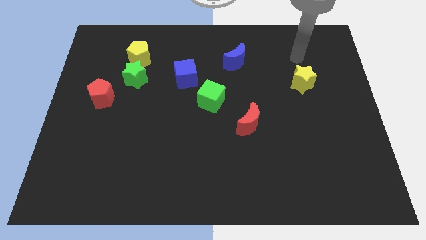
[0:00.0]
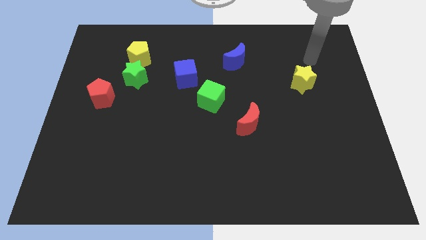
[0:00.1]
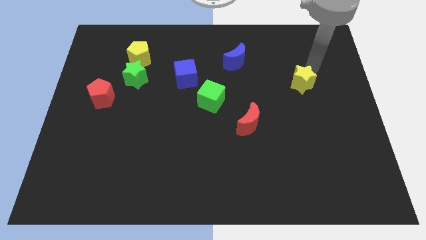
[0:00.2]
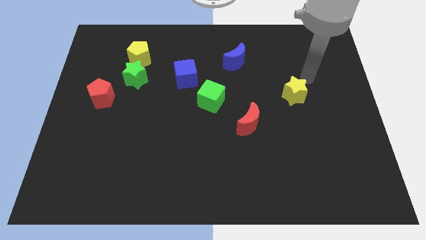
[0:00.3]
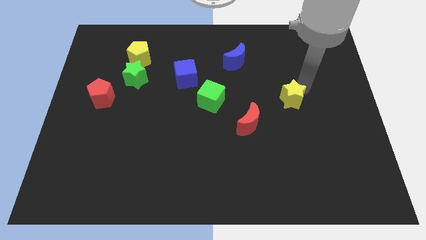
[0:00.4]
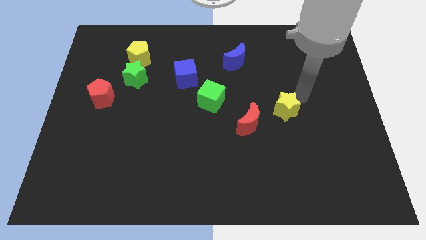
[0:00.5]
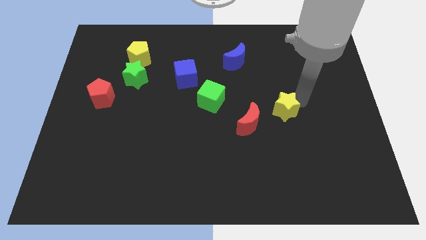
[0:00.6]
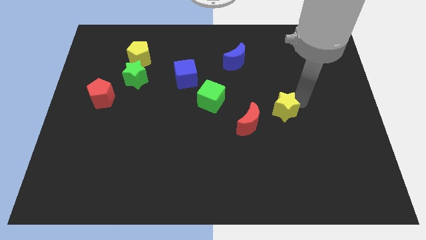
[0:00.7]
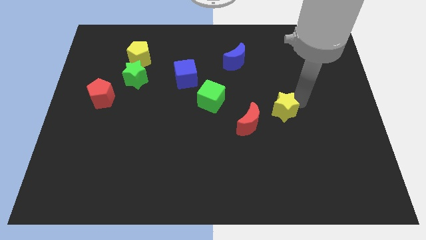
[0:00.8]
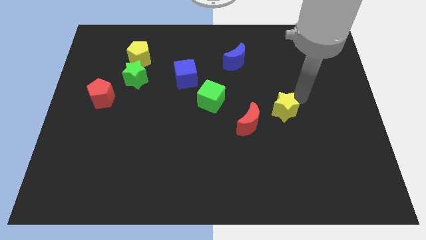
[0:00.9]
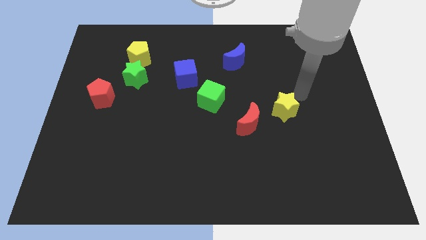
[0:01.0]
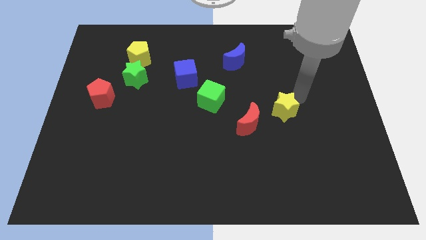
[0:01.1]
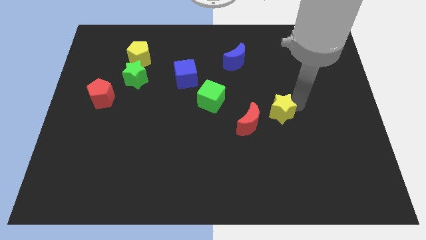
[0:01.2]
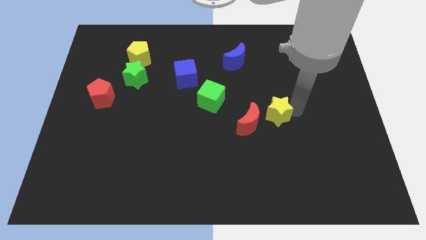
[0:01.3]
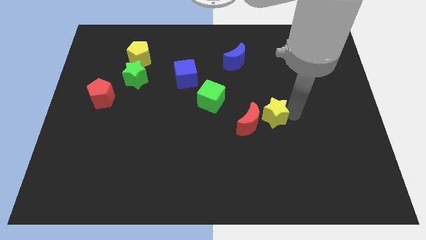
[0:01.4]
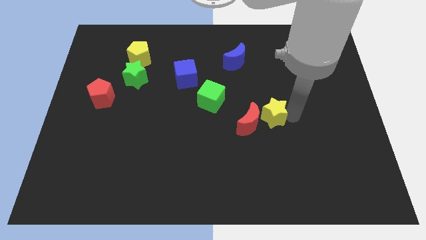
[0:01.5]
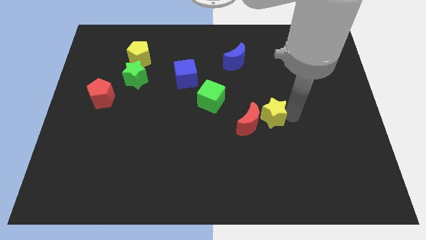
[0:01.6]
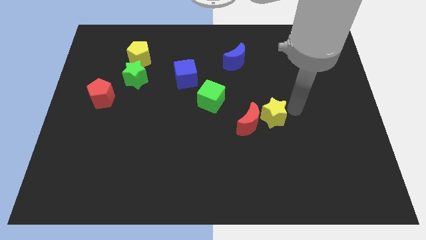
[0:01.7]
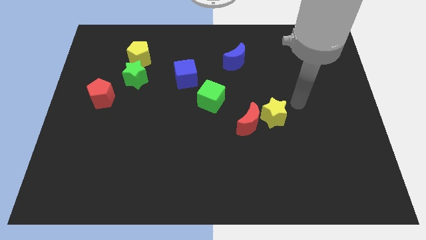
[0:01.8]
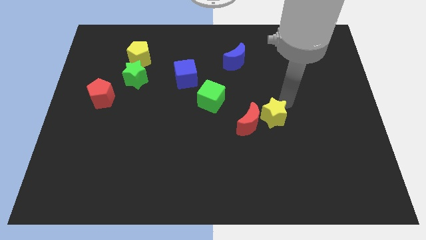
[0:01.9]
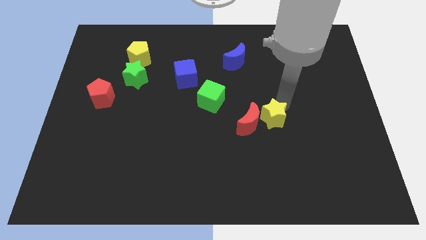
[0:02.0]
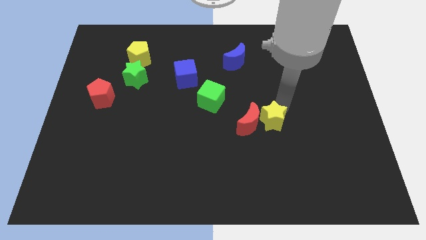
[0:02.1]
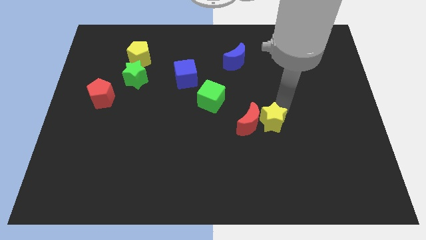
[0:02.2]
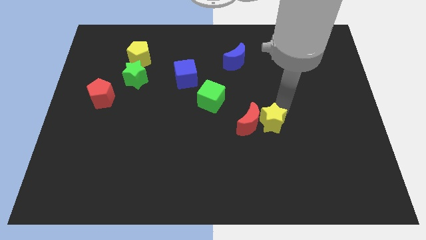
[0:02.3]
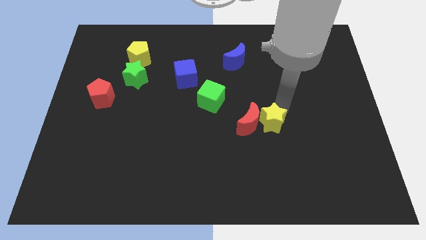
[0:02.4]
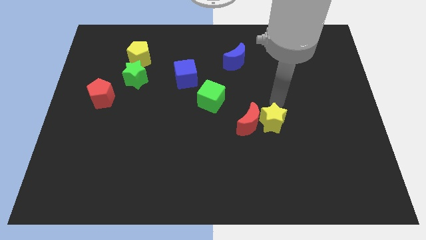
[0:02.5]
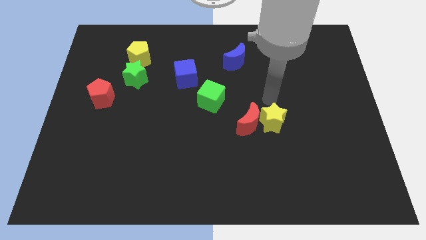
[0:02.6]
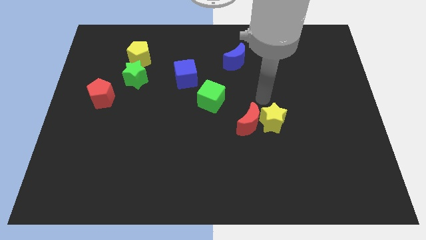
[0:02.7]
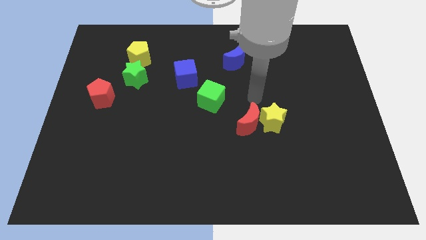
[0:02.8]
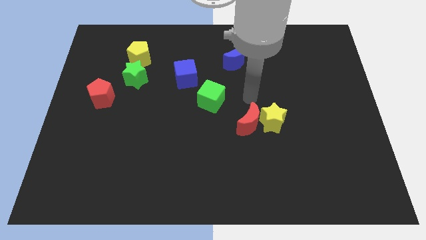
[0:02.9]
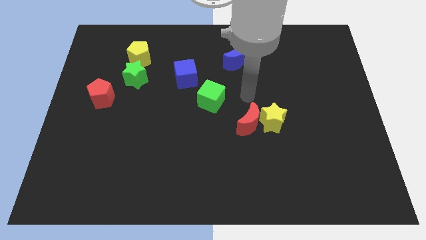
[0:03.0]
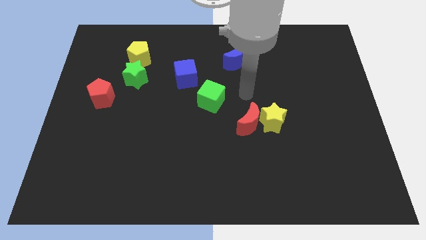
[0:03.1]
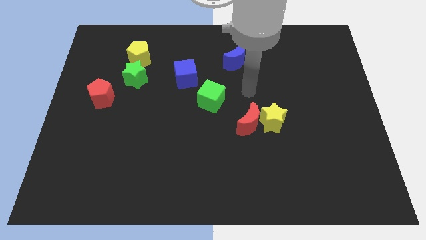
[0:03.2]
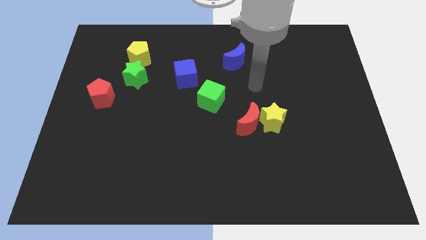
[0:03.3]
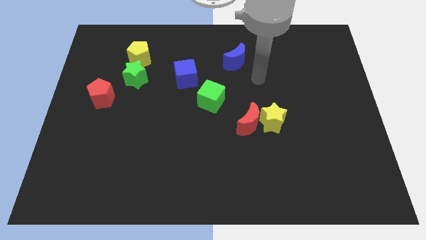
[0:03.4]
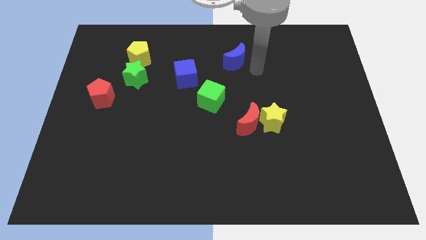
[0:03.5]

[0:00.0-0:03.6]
push the yellow star to the right of red crescent

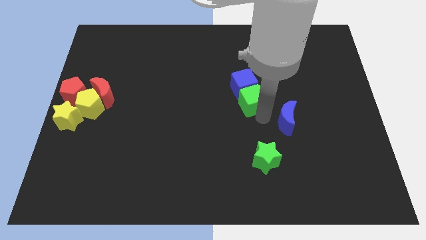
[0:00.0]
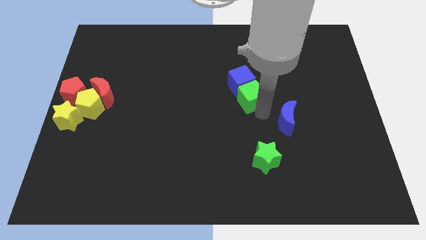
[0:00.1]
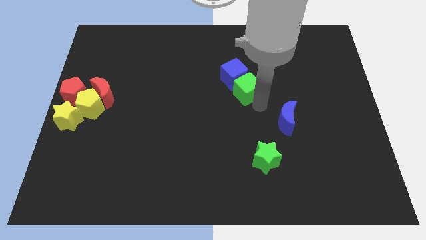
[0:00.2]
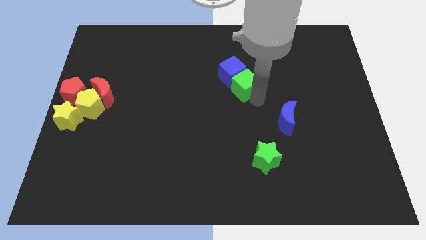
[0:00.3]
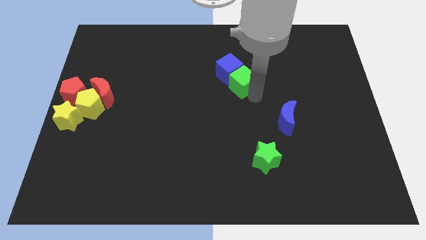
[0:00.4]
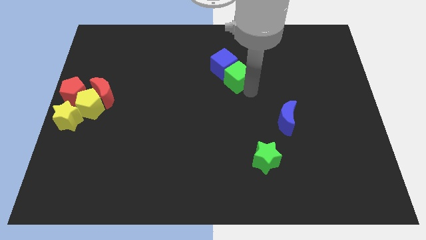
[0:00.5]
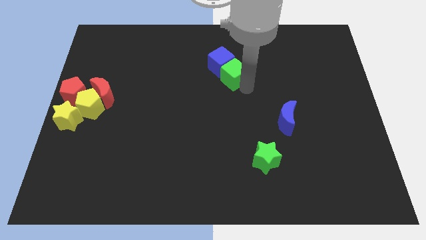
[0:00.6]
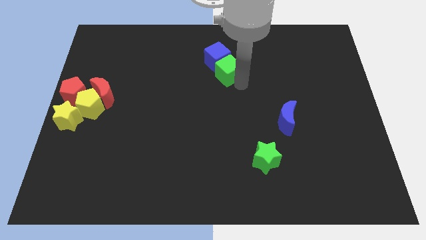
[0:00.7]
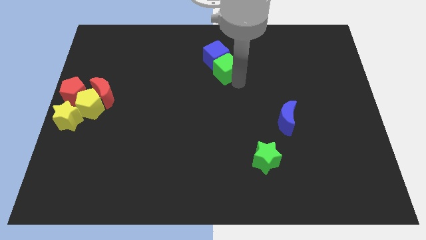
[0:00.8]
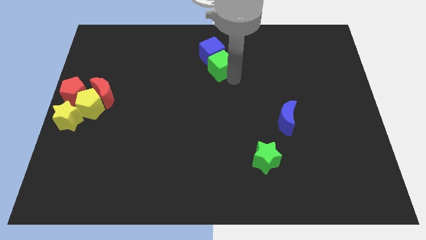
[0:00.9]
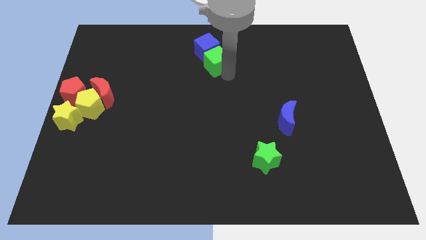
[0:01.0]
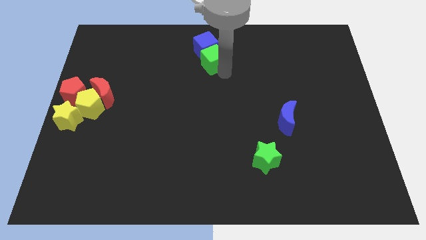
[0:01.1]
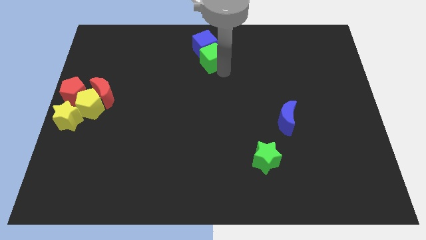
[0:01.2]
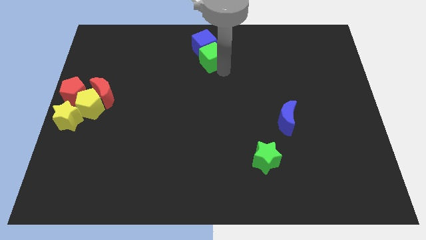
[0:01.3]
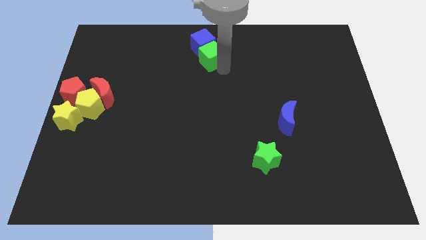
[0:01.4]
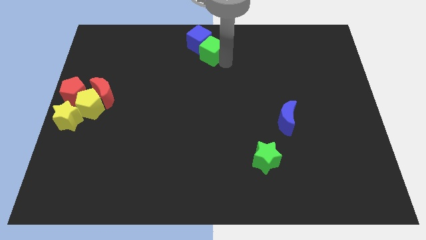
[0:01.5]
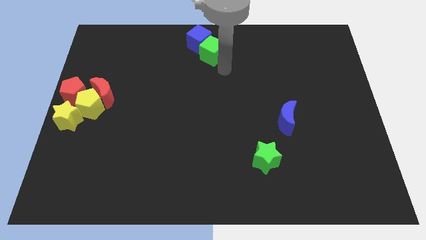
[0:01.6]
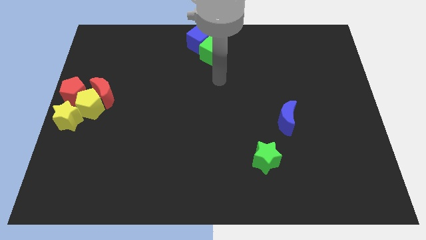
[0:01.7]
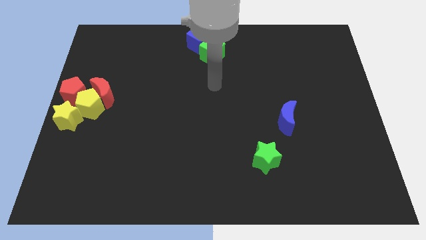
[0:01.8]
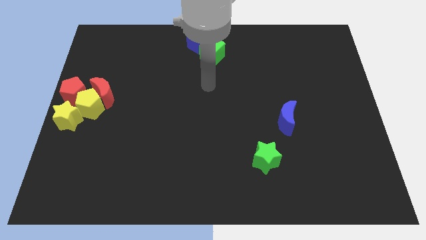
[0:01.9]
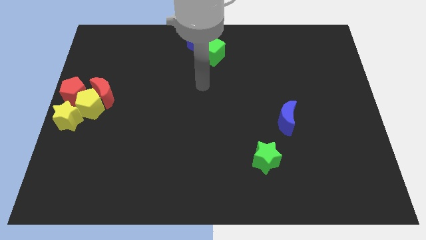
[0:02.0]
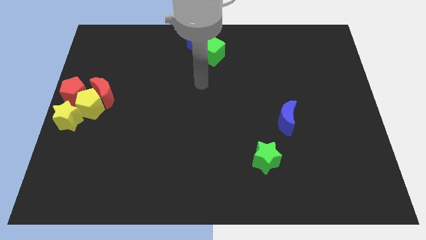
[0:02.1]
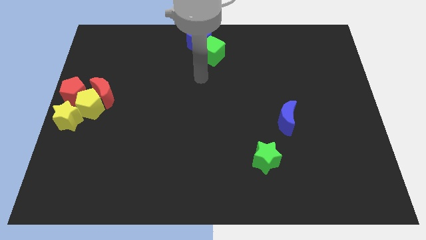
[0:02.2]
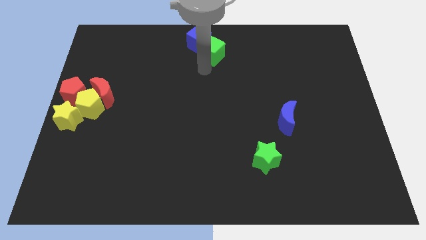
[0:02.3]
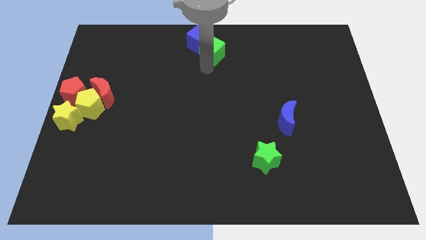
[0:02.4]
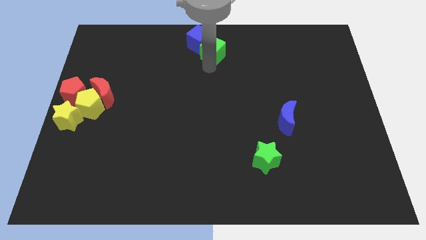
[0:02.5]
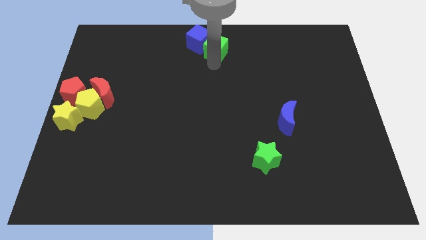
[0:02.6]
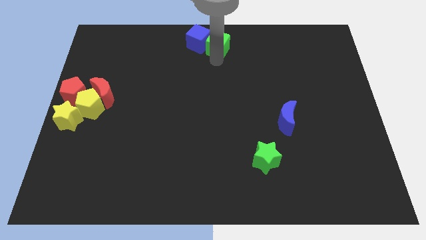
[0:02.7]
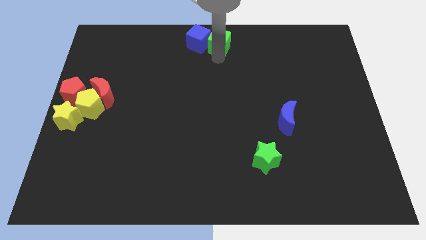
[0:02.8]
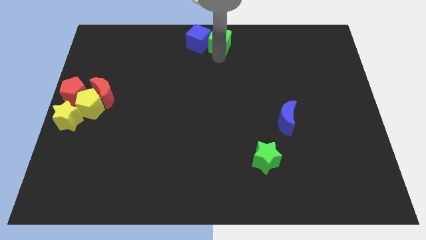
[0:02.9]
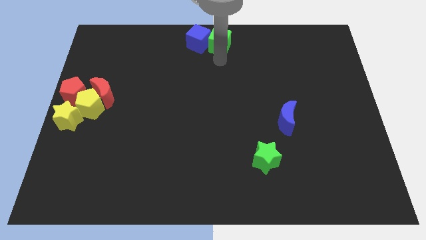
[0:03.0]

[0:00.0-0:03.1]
push the blue cube and green cube to the top center of the board

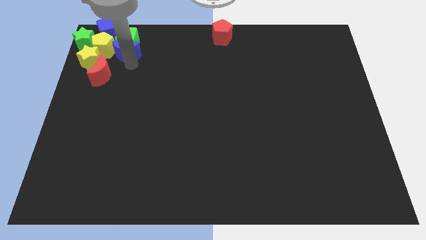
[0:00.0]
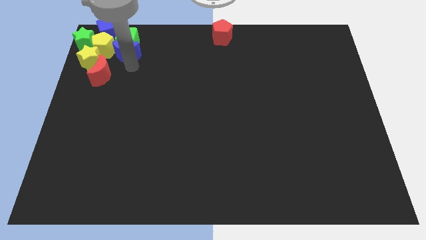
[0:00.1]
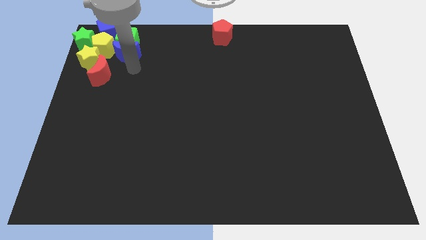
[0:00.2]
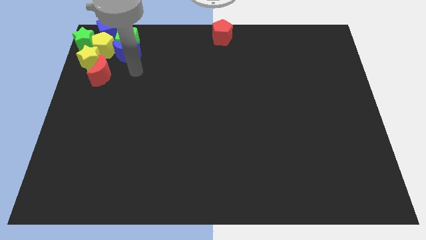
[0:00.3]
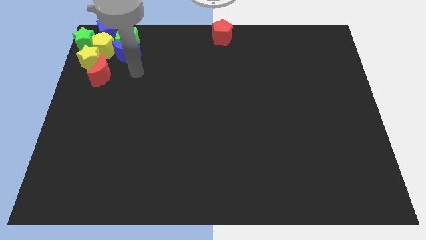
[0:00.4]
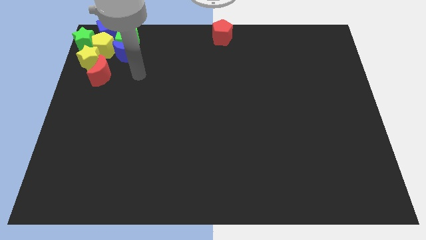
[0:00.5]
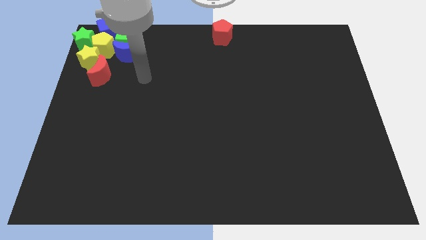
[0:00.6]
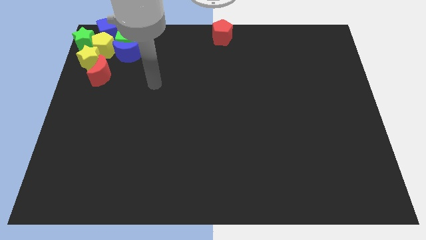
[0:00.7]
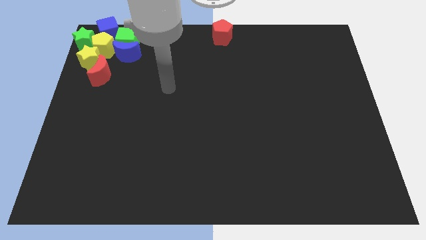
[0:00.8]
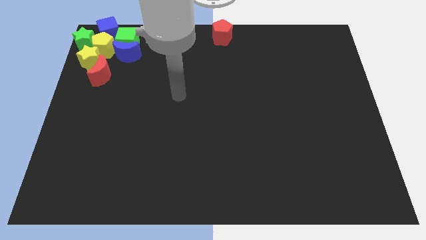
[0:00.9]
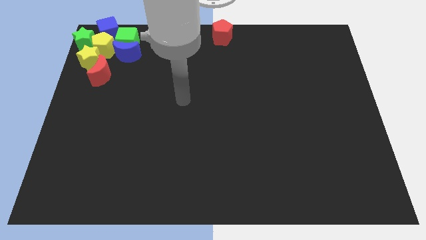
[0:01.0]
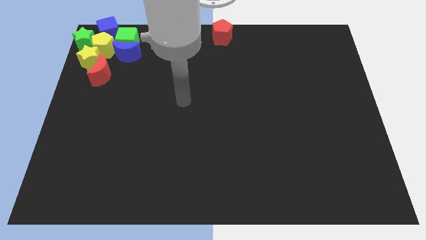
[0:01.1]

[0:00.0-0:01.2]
move your hand to the center of the board

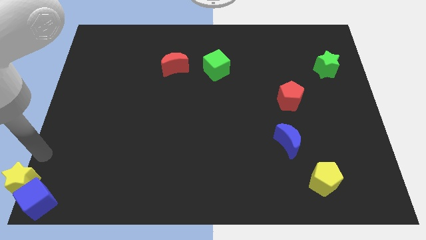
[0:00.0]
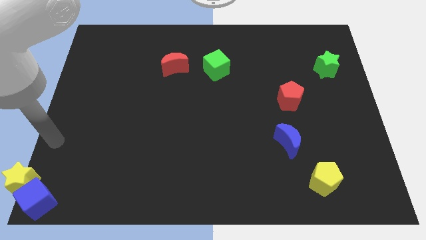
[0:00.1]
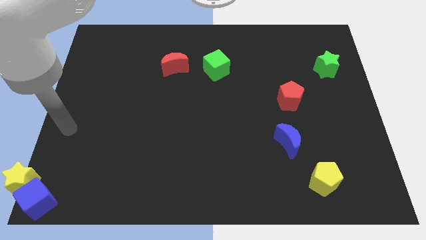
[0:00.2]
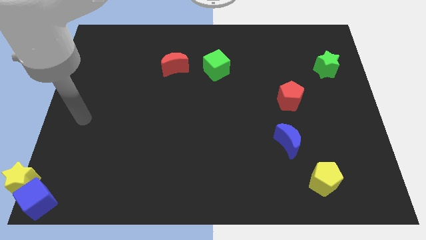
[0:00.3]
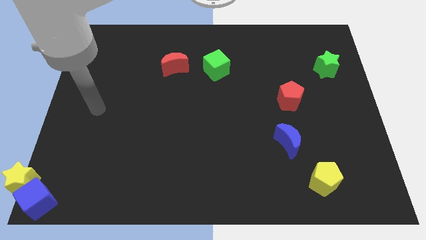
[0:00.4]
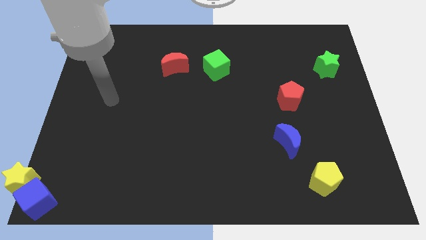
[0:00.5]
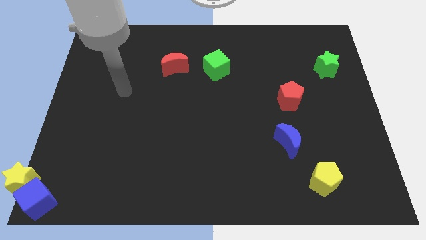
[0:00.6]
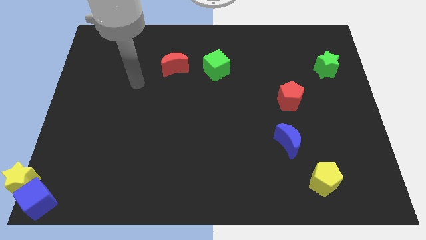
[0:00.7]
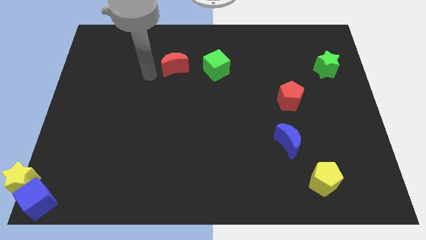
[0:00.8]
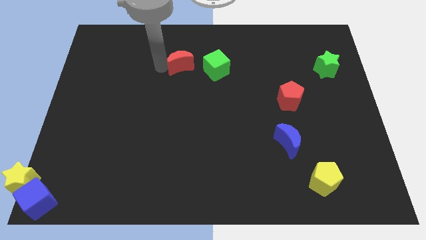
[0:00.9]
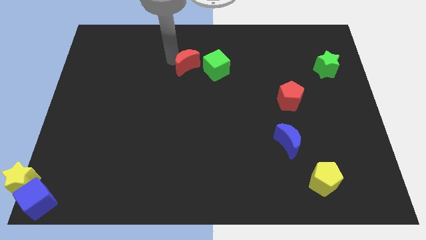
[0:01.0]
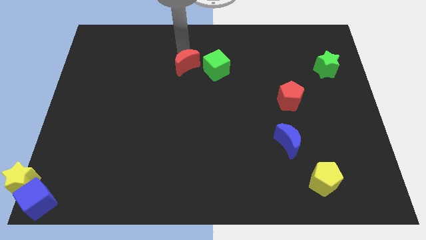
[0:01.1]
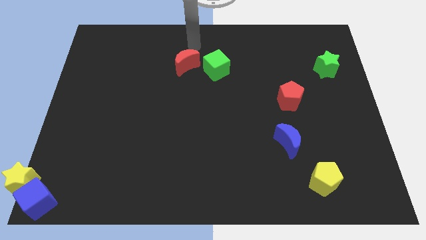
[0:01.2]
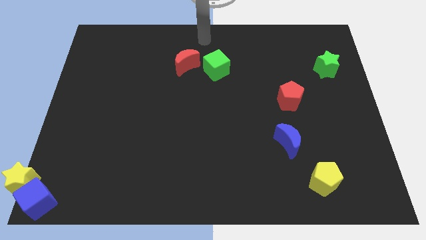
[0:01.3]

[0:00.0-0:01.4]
tap the red crescent
